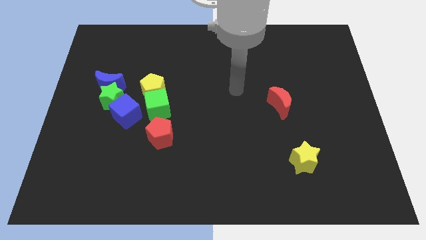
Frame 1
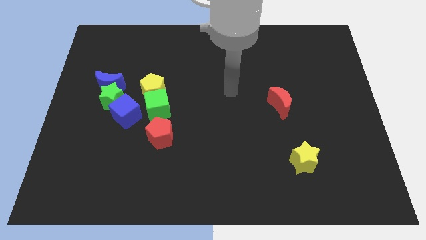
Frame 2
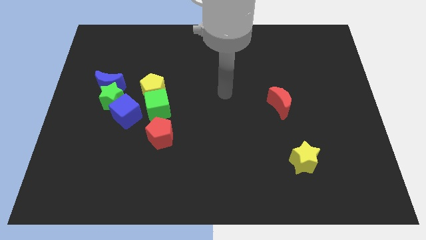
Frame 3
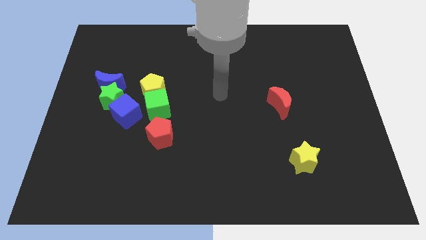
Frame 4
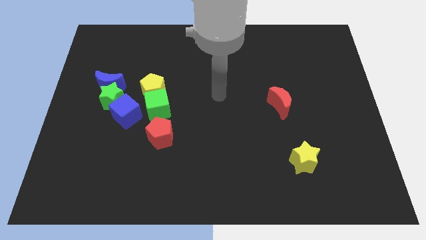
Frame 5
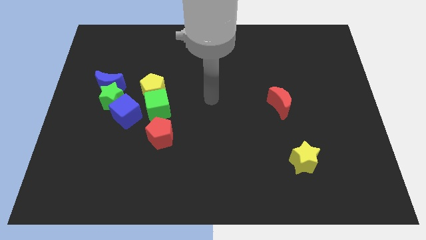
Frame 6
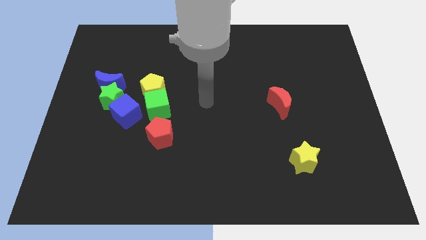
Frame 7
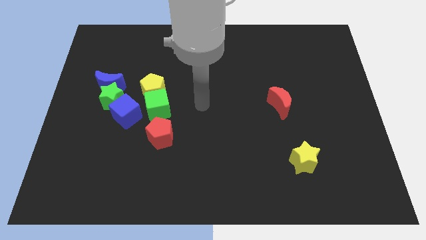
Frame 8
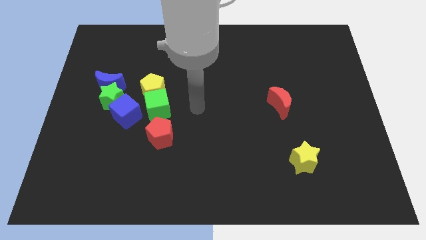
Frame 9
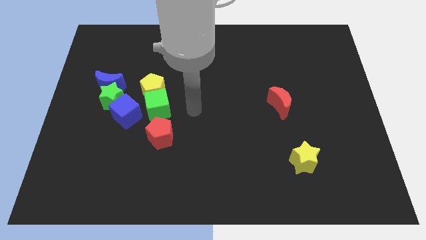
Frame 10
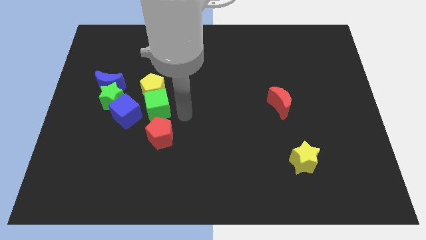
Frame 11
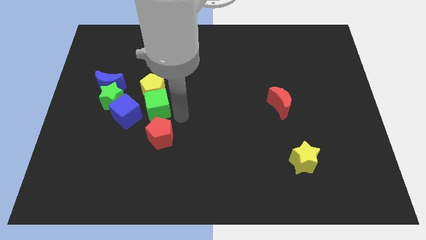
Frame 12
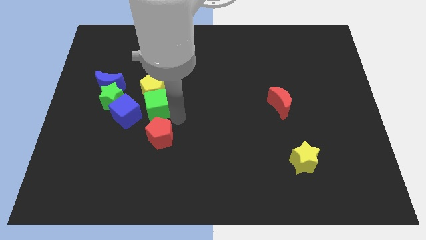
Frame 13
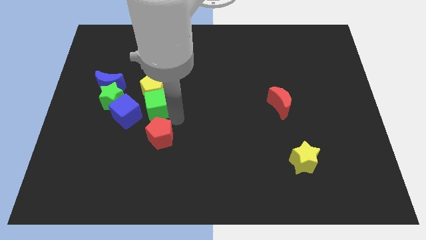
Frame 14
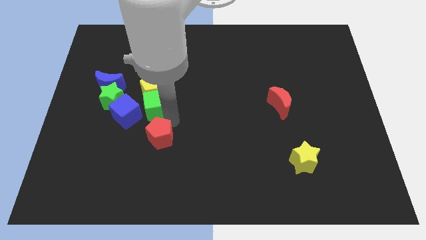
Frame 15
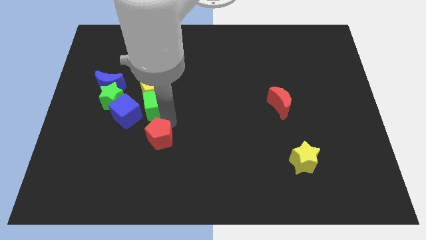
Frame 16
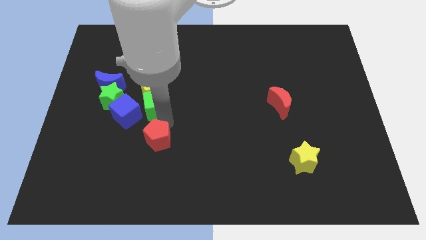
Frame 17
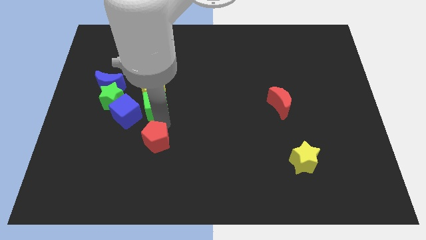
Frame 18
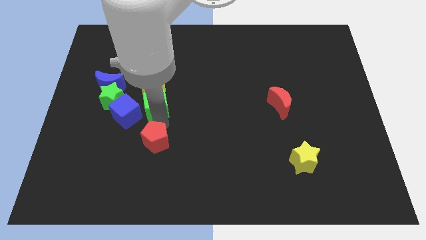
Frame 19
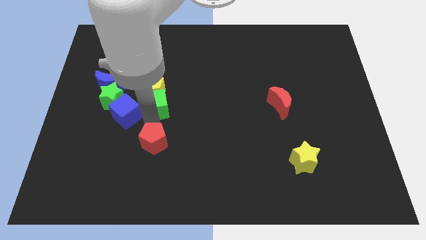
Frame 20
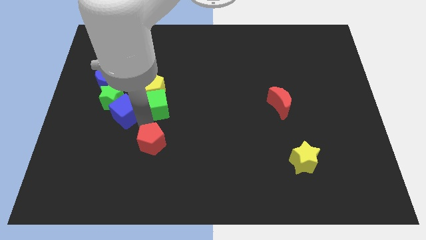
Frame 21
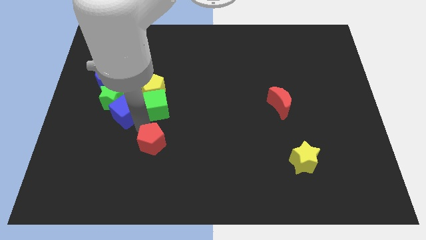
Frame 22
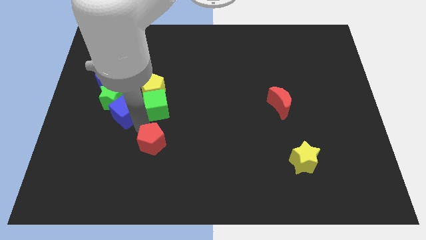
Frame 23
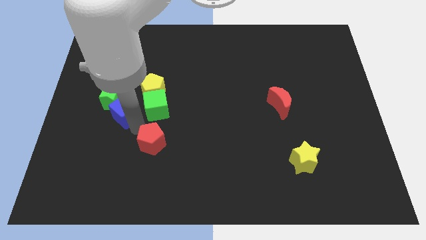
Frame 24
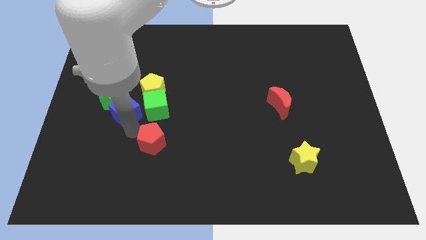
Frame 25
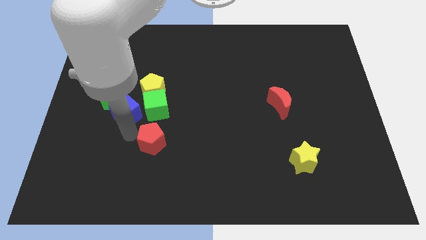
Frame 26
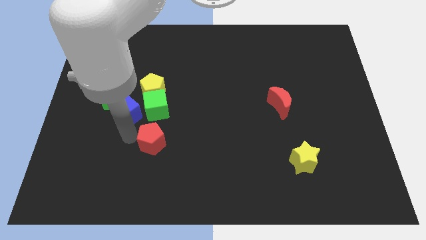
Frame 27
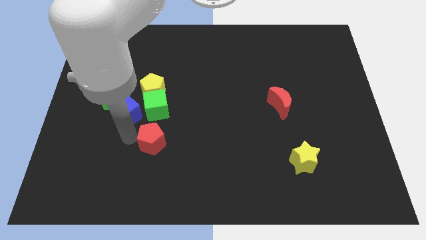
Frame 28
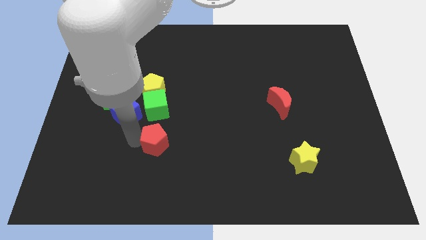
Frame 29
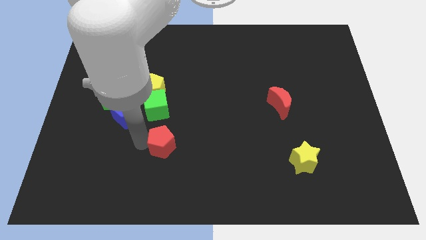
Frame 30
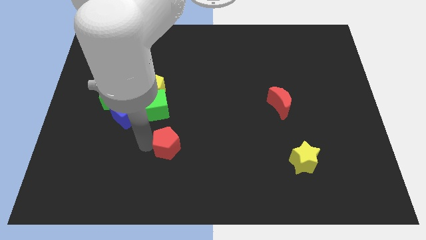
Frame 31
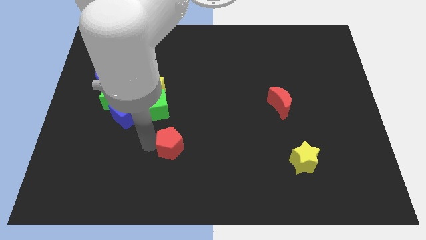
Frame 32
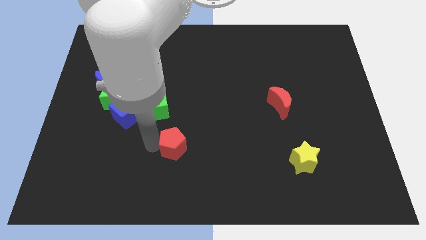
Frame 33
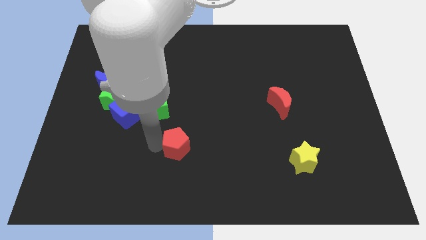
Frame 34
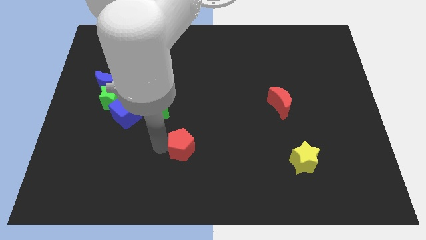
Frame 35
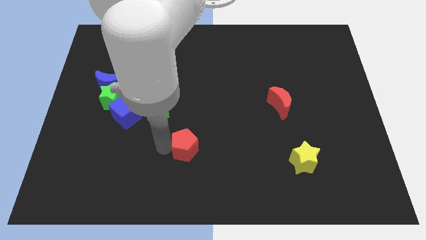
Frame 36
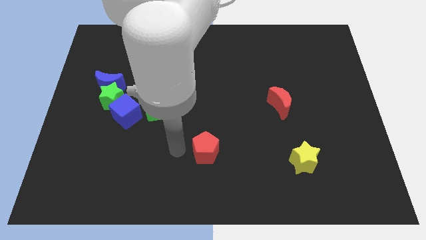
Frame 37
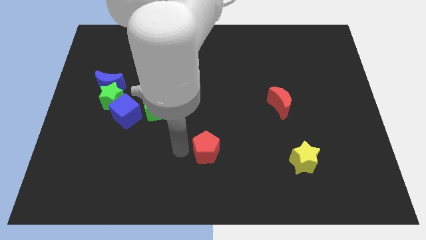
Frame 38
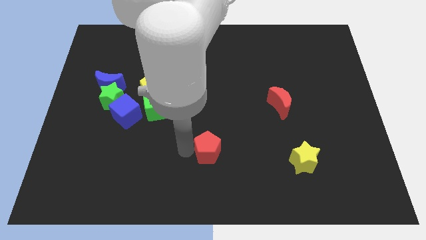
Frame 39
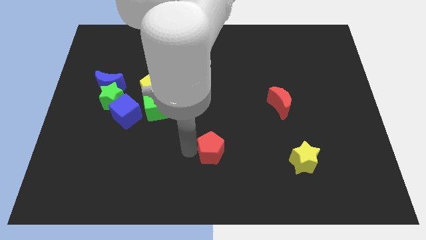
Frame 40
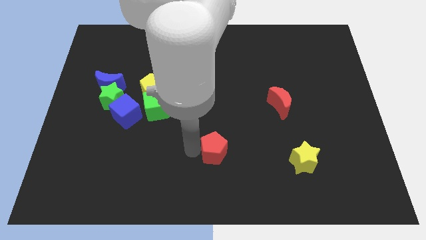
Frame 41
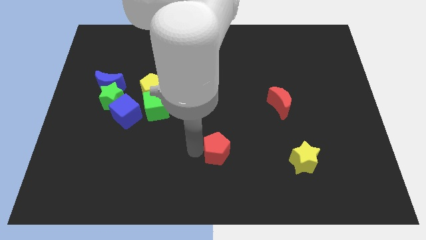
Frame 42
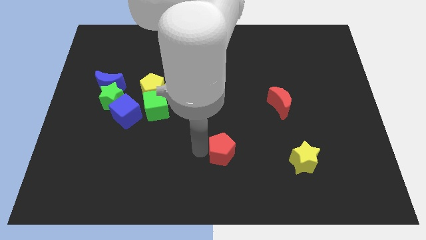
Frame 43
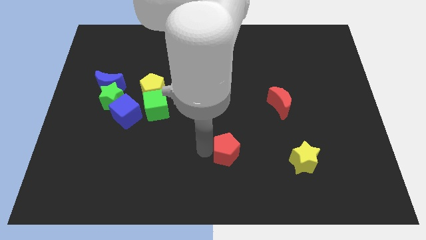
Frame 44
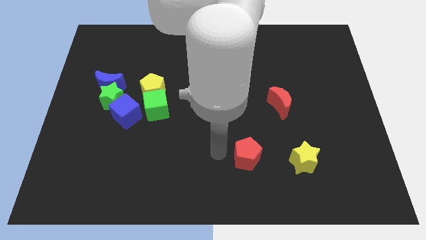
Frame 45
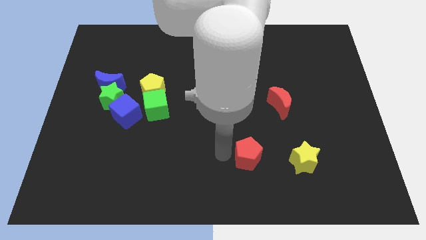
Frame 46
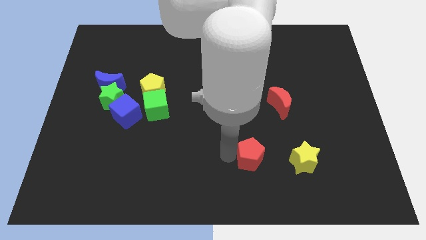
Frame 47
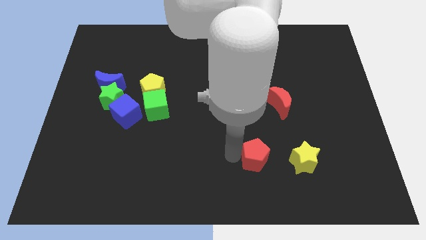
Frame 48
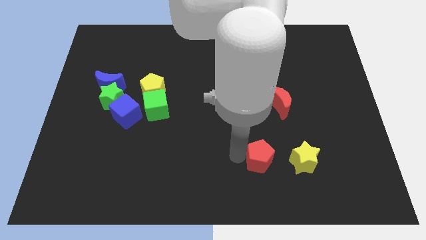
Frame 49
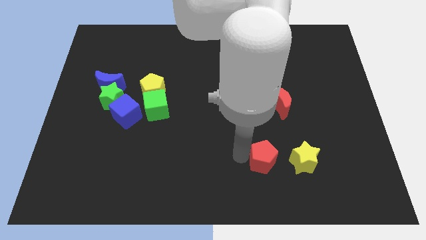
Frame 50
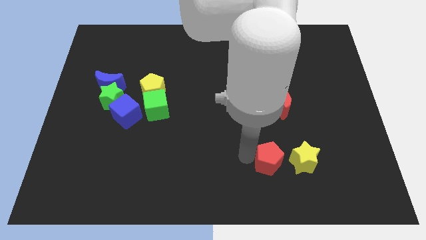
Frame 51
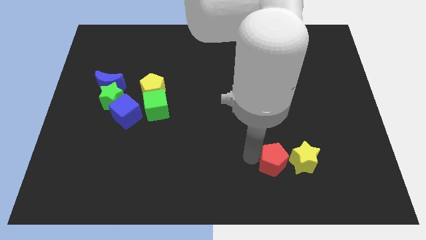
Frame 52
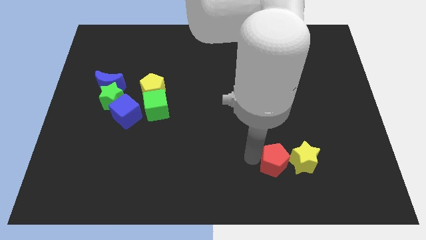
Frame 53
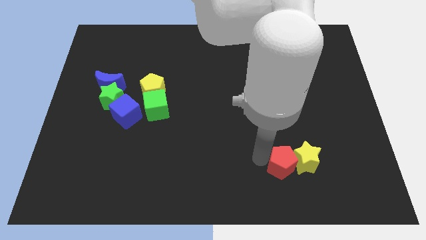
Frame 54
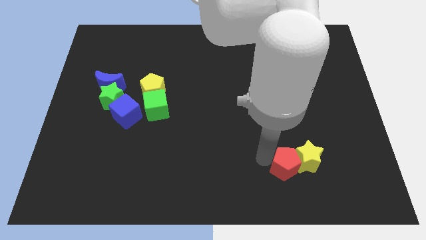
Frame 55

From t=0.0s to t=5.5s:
slide the red pentagon to the yellow star

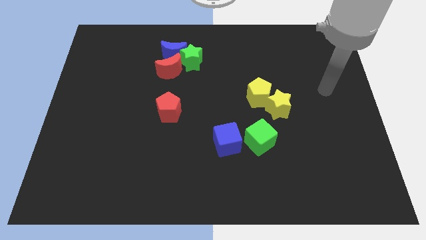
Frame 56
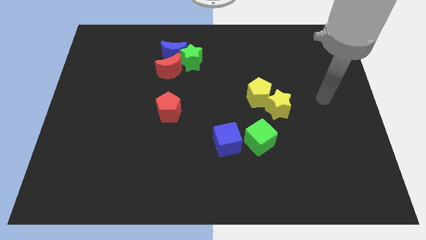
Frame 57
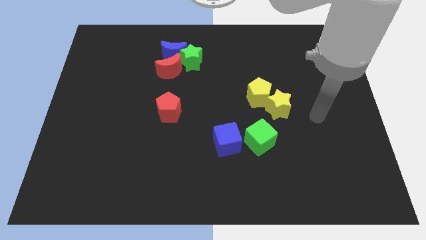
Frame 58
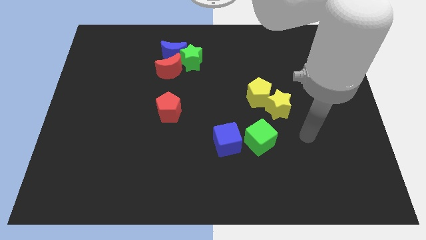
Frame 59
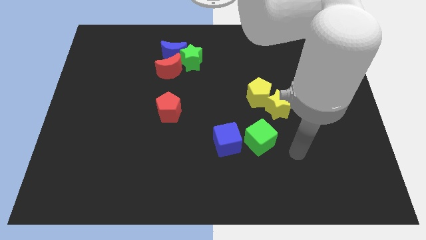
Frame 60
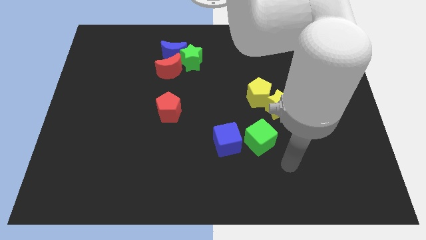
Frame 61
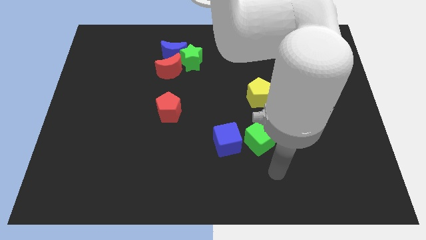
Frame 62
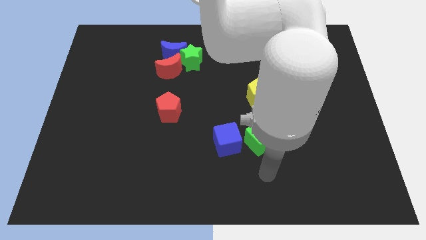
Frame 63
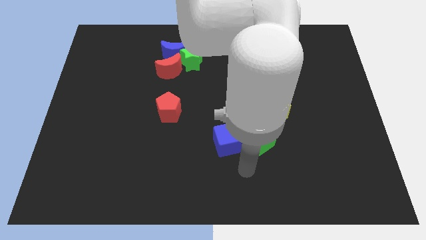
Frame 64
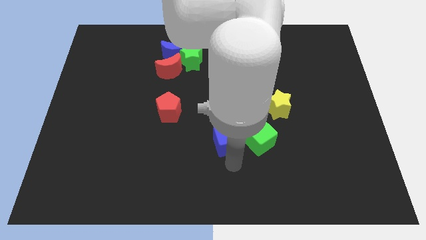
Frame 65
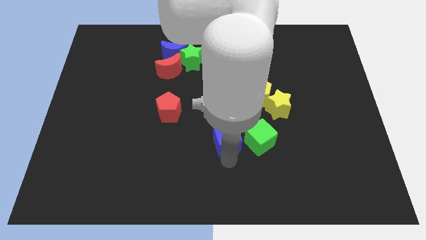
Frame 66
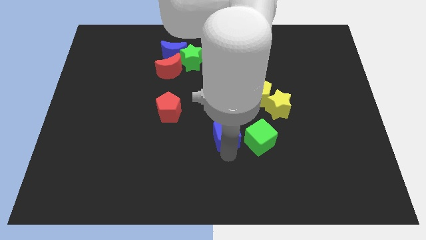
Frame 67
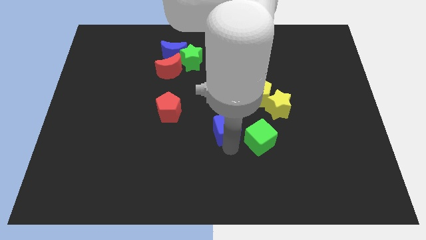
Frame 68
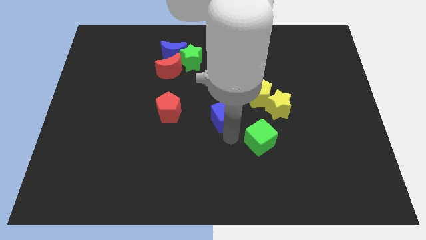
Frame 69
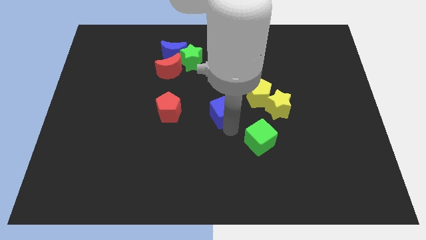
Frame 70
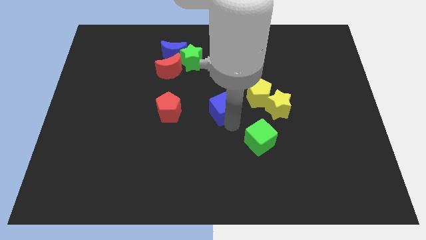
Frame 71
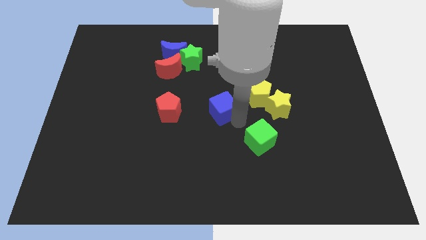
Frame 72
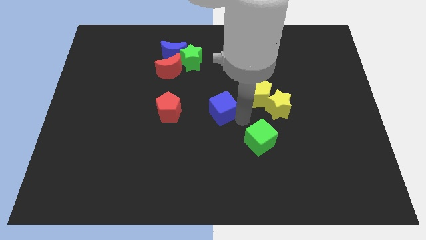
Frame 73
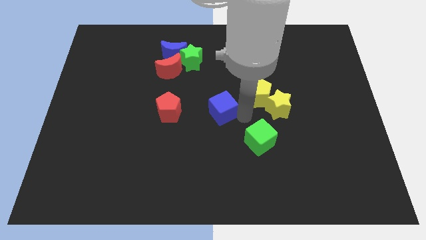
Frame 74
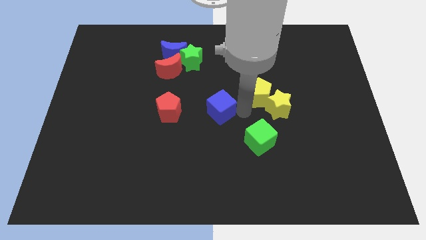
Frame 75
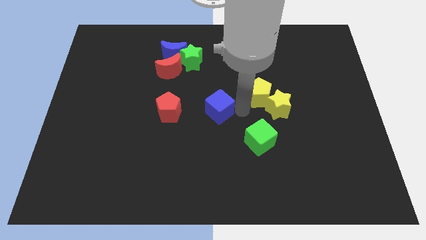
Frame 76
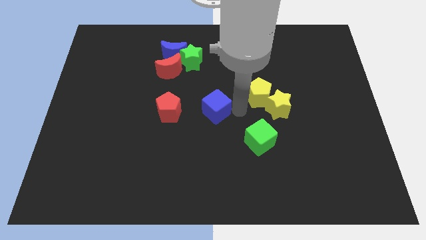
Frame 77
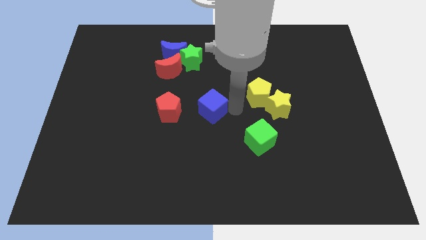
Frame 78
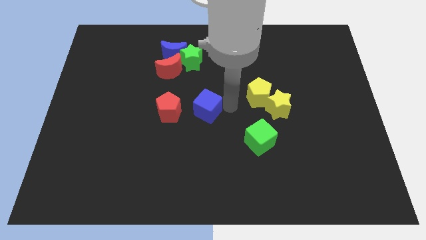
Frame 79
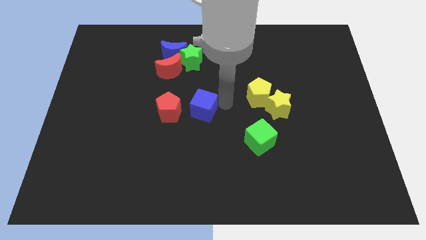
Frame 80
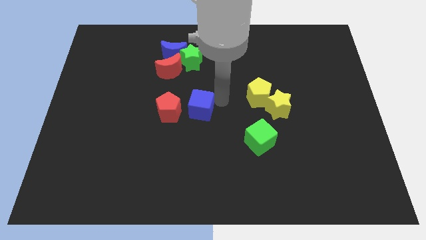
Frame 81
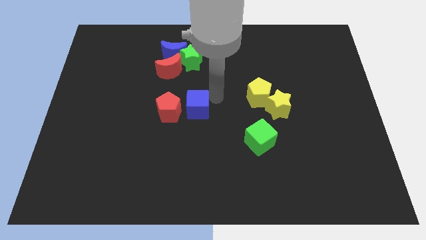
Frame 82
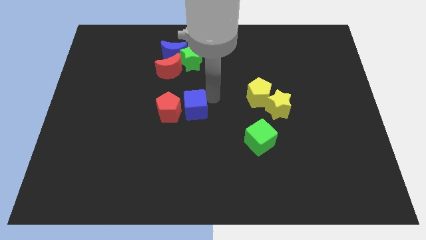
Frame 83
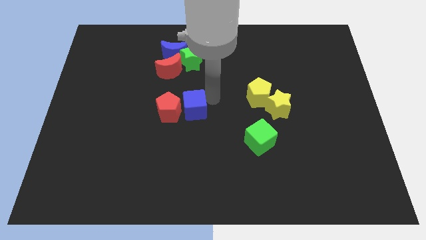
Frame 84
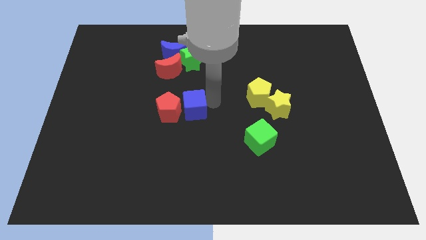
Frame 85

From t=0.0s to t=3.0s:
put the blue cube close to the red pentagon
